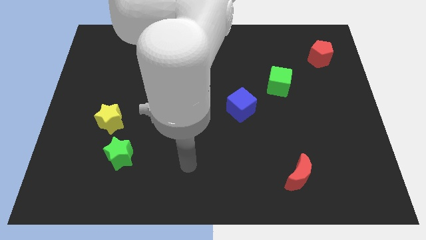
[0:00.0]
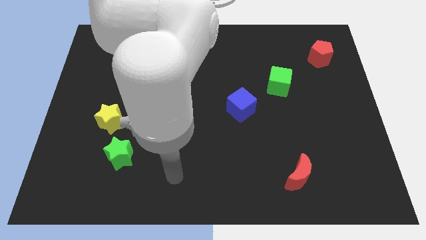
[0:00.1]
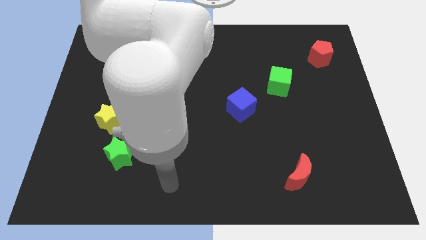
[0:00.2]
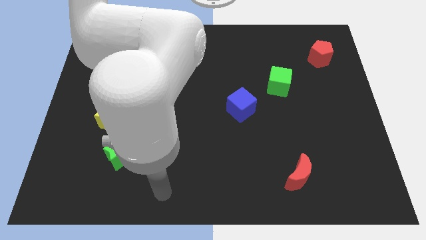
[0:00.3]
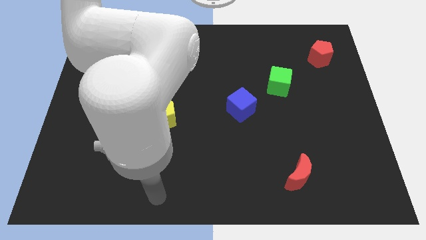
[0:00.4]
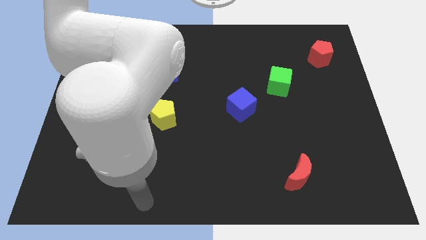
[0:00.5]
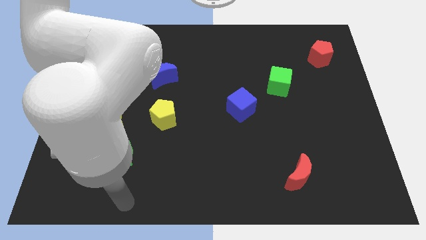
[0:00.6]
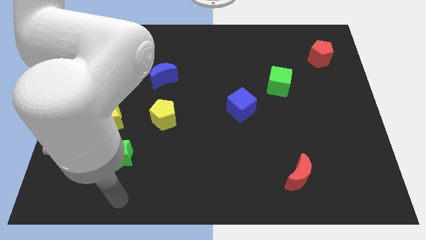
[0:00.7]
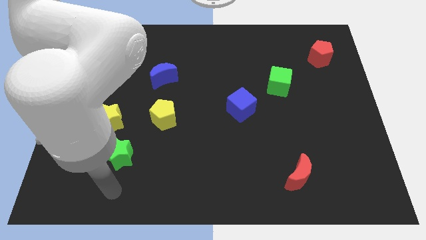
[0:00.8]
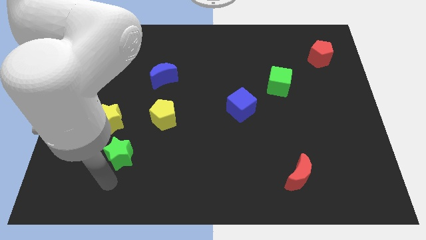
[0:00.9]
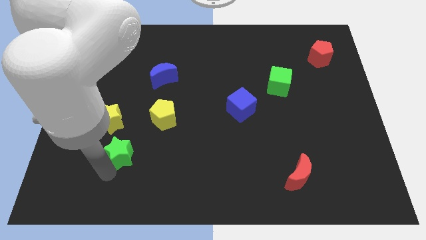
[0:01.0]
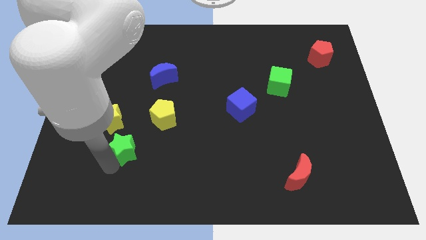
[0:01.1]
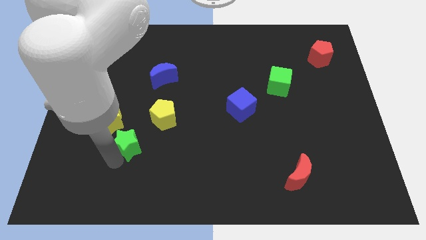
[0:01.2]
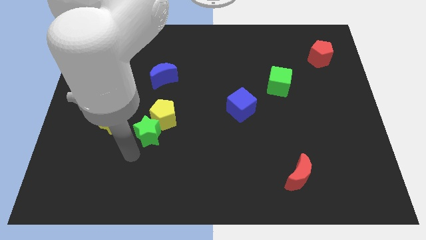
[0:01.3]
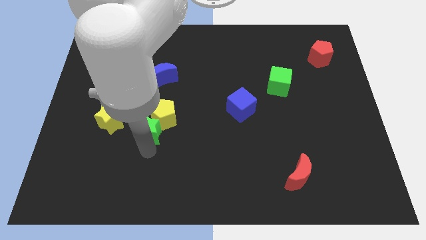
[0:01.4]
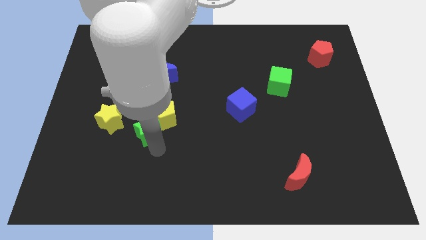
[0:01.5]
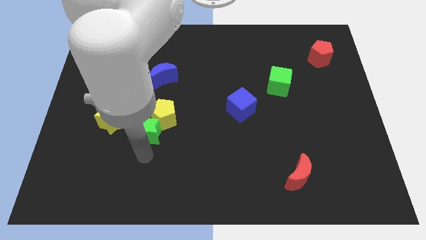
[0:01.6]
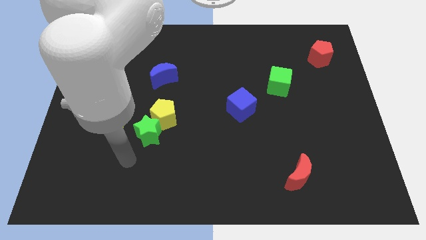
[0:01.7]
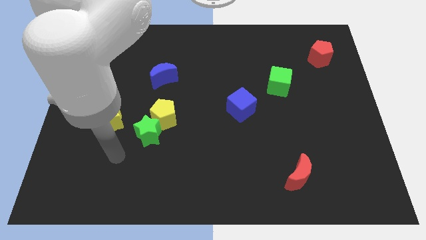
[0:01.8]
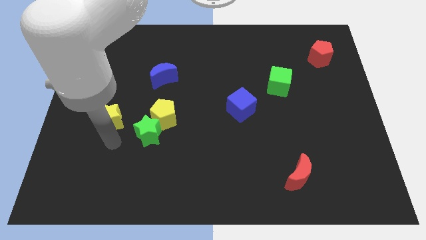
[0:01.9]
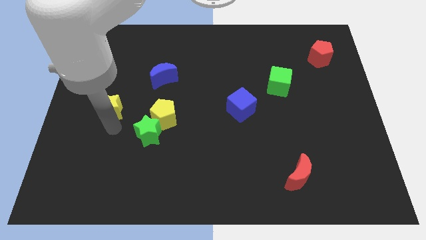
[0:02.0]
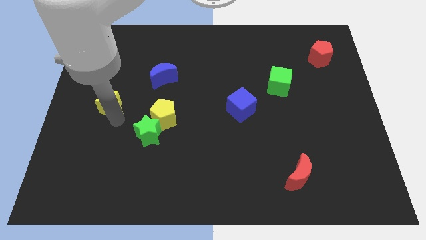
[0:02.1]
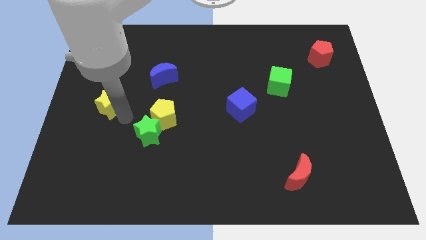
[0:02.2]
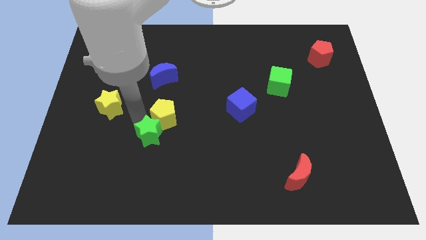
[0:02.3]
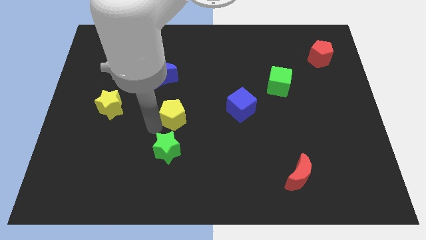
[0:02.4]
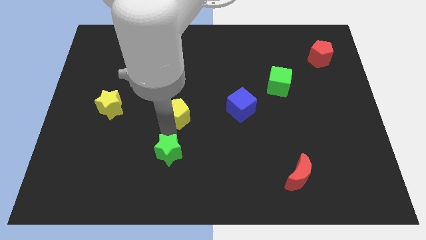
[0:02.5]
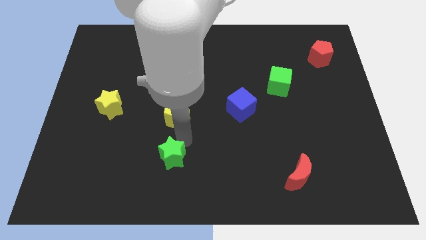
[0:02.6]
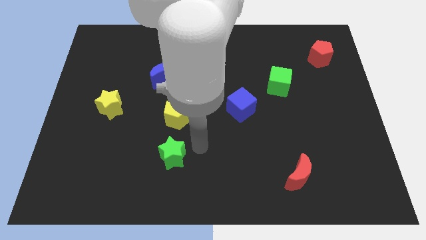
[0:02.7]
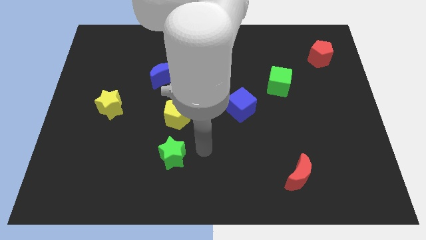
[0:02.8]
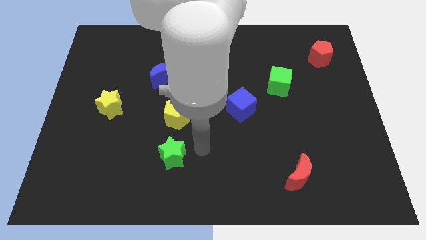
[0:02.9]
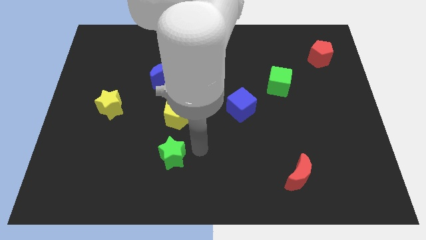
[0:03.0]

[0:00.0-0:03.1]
place the green star below the yellow pentagon

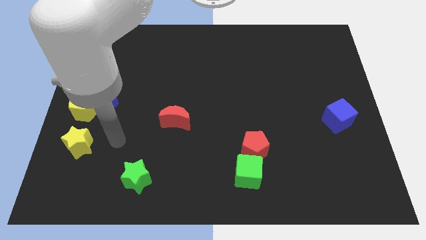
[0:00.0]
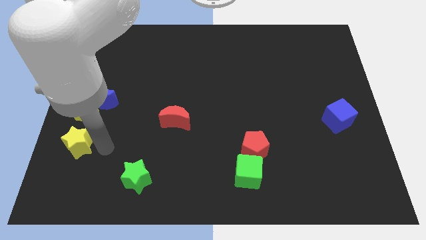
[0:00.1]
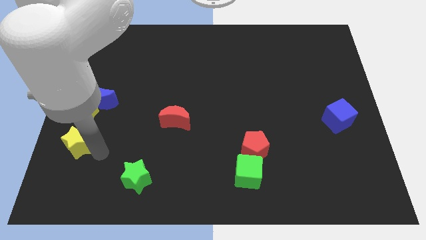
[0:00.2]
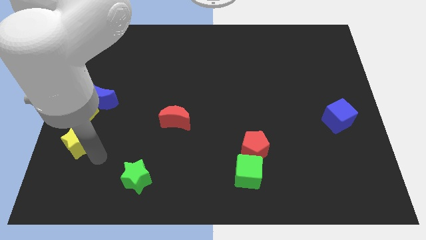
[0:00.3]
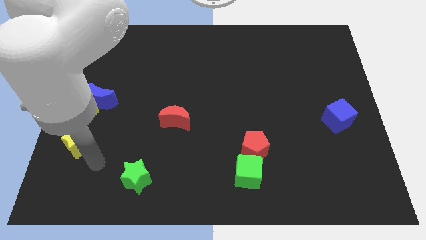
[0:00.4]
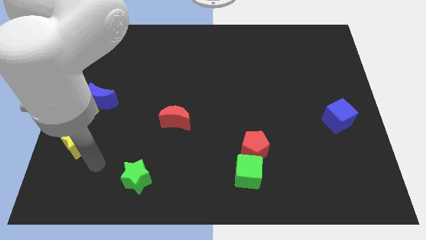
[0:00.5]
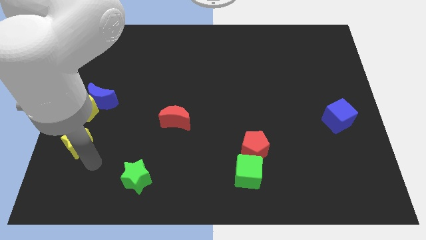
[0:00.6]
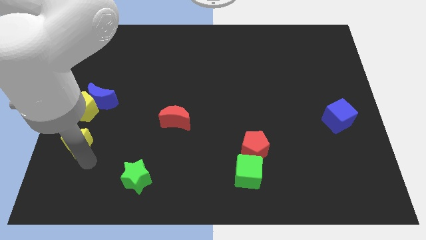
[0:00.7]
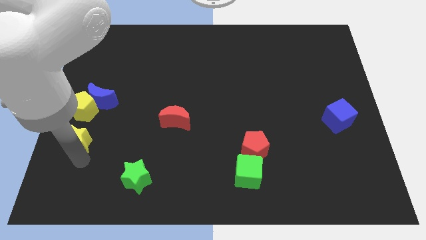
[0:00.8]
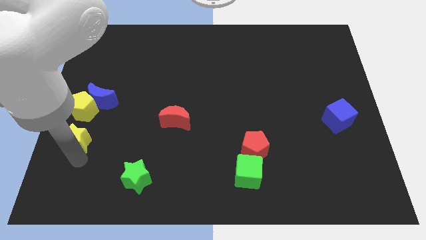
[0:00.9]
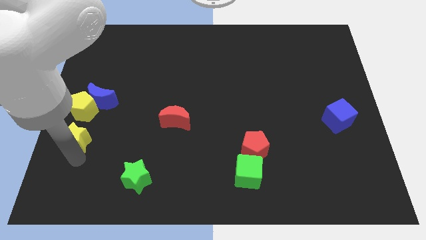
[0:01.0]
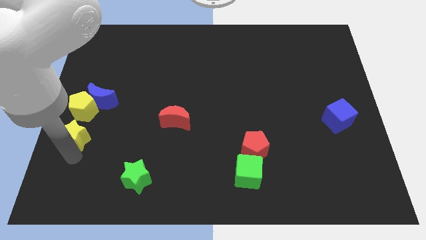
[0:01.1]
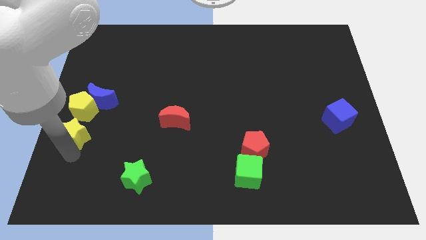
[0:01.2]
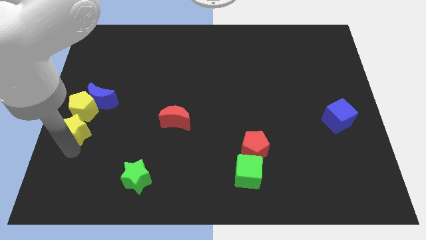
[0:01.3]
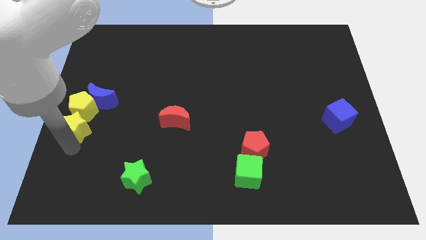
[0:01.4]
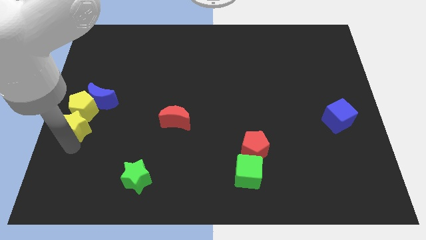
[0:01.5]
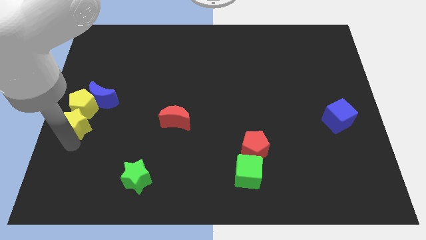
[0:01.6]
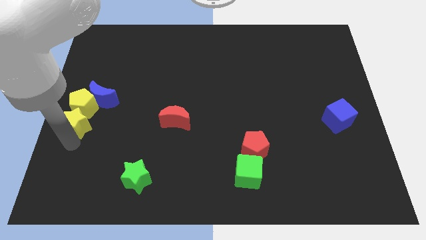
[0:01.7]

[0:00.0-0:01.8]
move the yellow star into the bottom side of the yellow pentagon

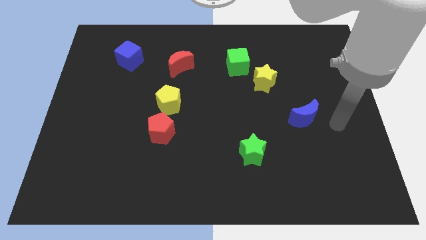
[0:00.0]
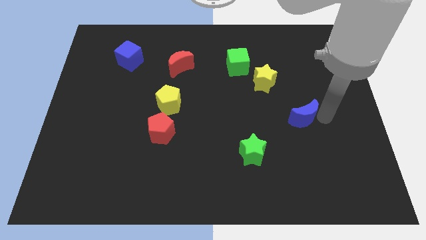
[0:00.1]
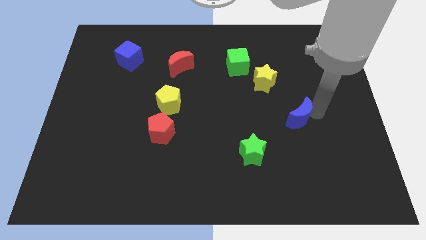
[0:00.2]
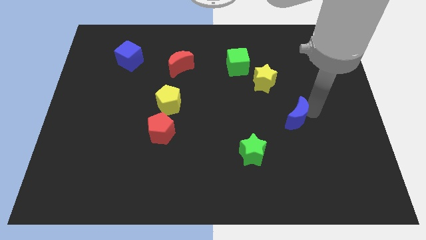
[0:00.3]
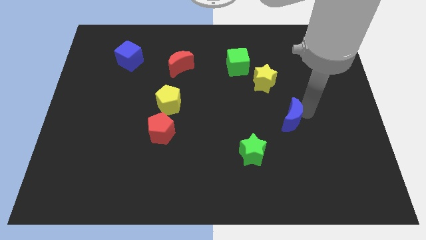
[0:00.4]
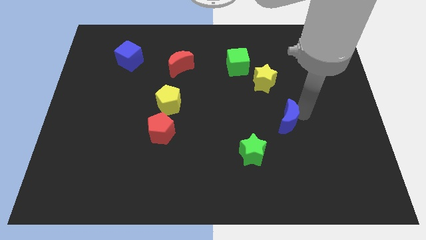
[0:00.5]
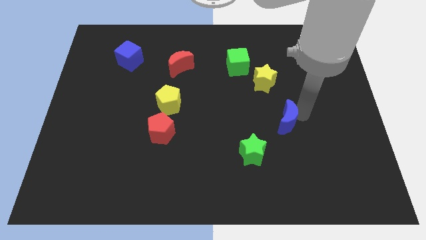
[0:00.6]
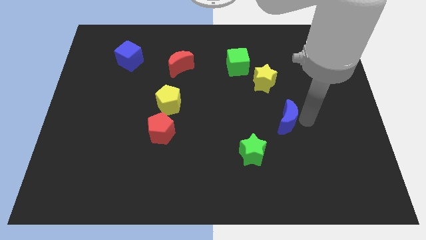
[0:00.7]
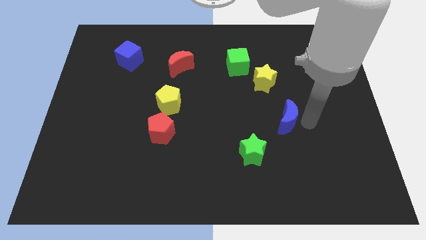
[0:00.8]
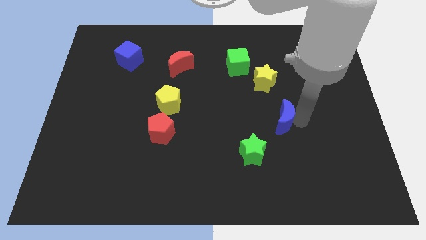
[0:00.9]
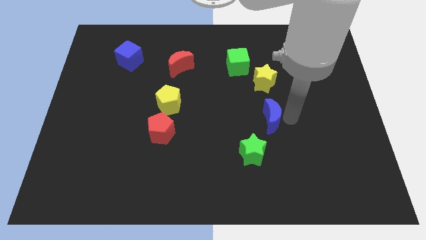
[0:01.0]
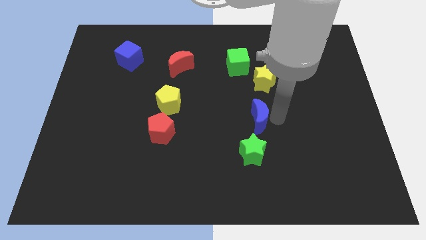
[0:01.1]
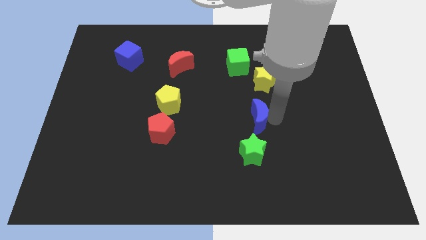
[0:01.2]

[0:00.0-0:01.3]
place the blue crescent above the green star

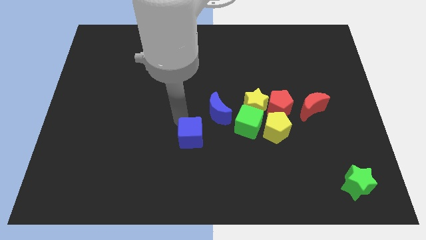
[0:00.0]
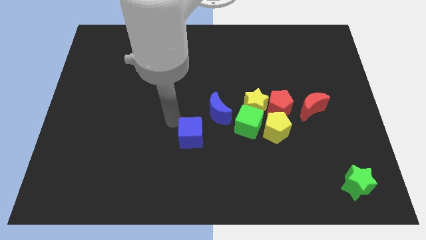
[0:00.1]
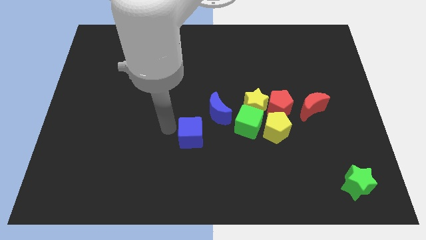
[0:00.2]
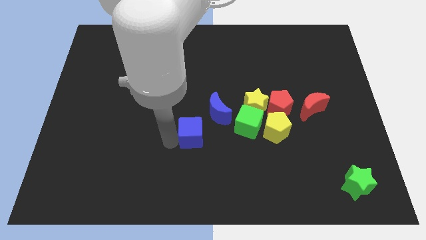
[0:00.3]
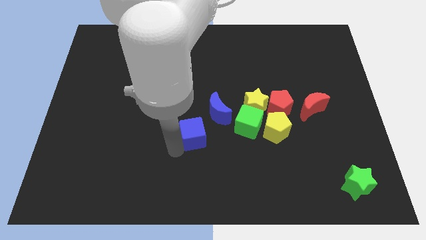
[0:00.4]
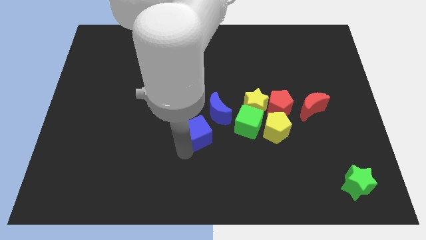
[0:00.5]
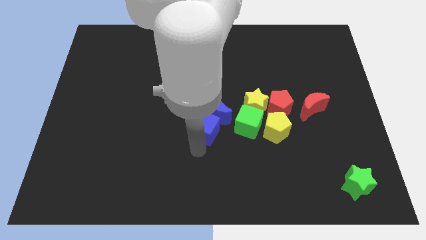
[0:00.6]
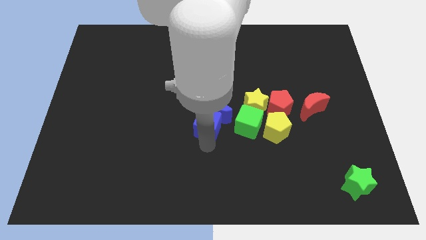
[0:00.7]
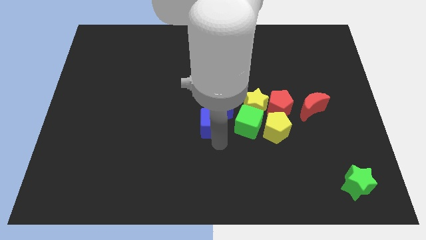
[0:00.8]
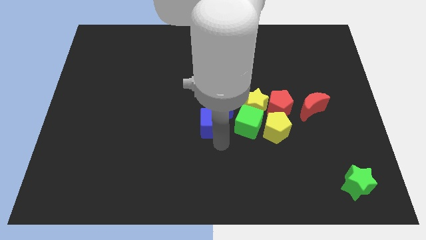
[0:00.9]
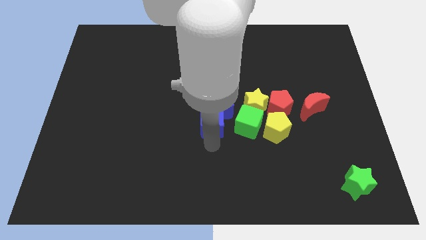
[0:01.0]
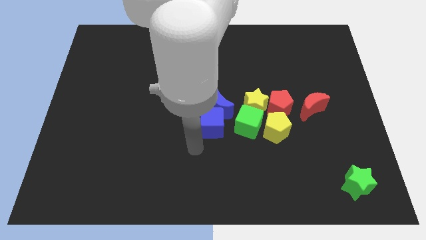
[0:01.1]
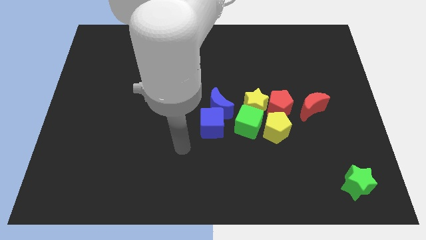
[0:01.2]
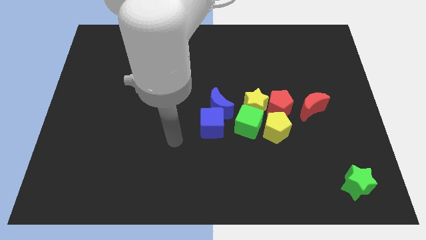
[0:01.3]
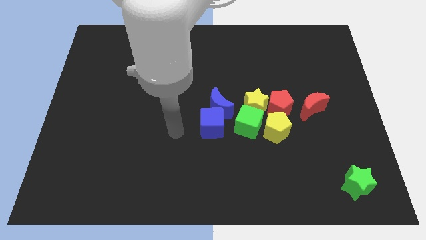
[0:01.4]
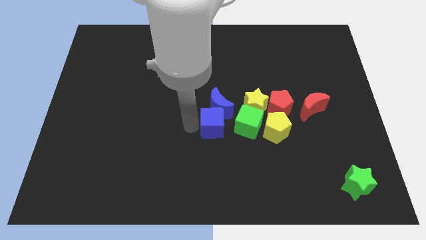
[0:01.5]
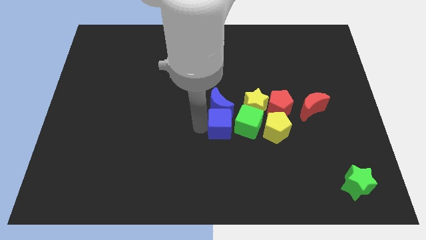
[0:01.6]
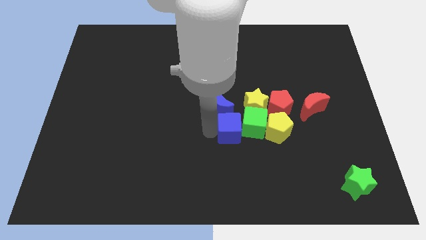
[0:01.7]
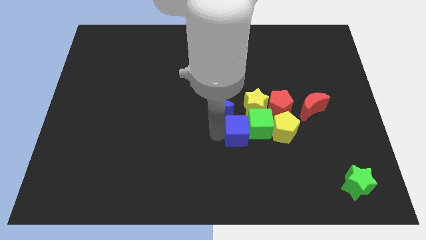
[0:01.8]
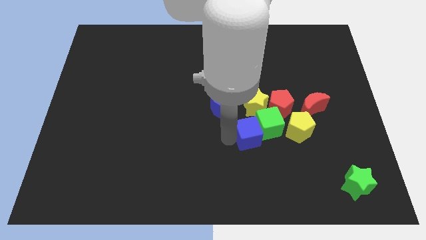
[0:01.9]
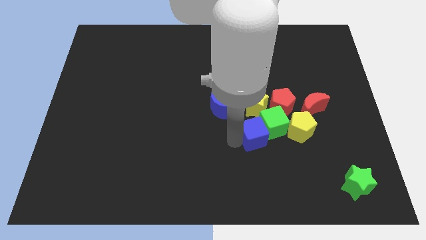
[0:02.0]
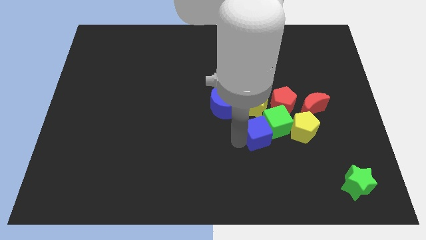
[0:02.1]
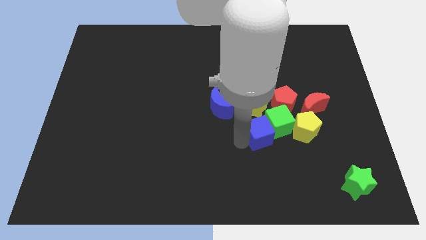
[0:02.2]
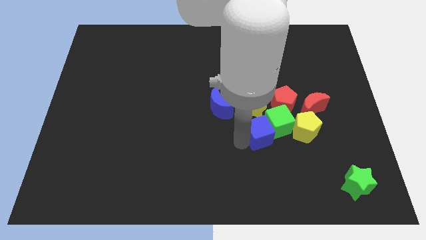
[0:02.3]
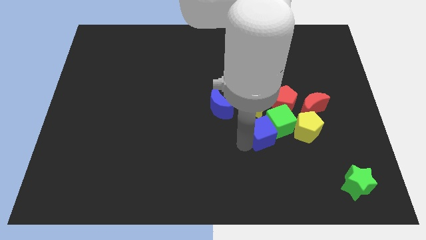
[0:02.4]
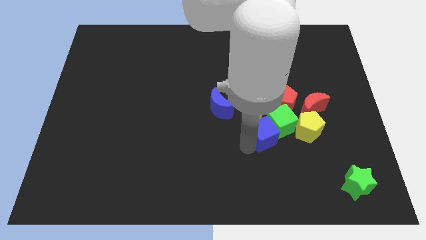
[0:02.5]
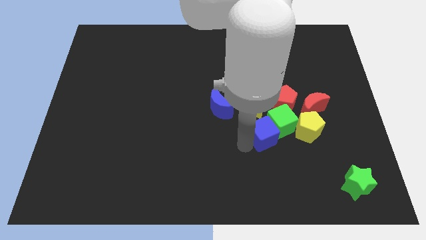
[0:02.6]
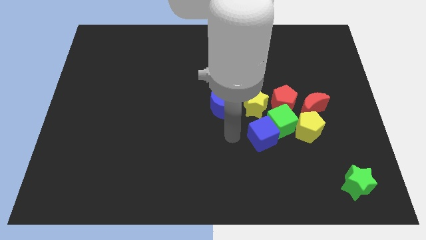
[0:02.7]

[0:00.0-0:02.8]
push the blue cube into the green cube
